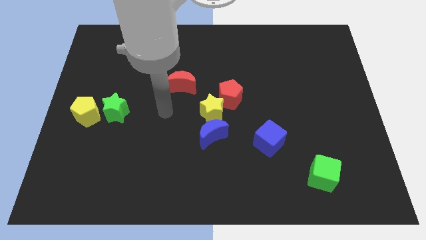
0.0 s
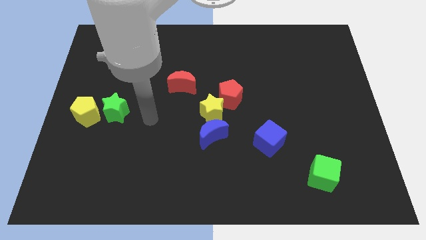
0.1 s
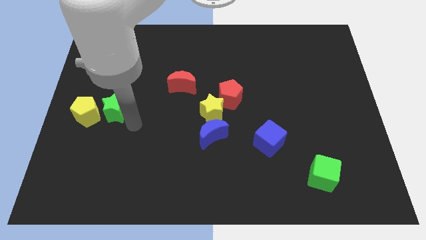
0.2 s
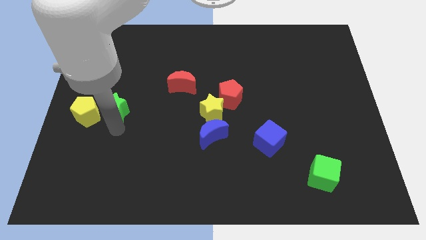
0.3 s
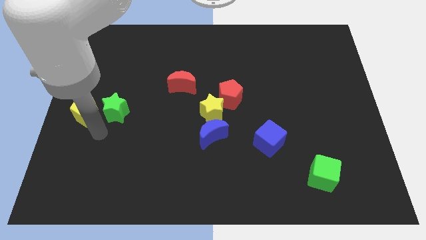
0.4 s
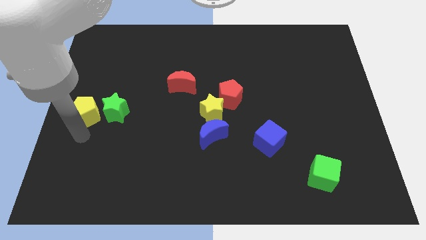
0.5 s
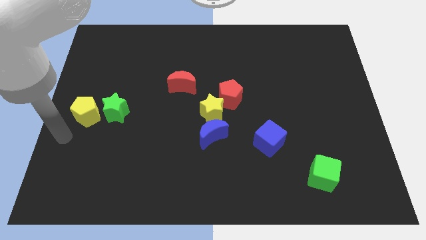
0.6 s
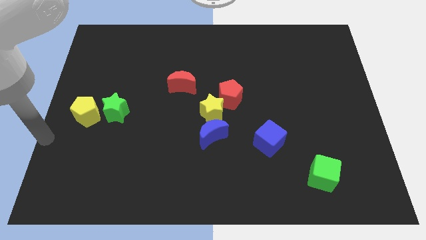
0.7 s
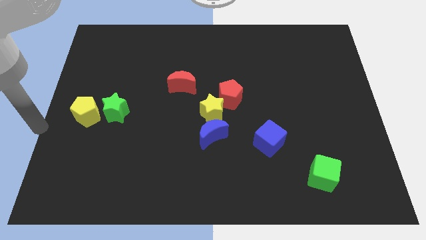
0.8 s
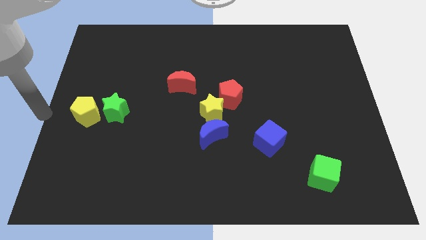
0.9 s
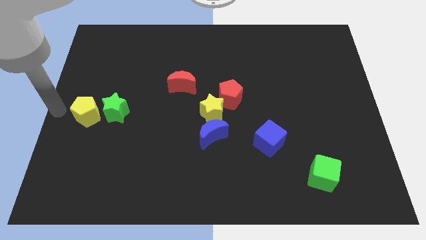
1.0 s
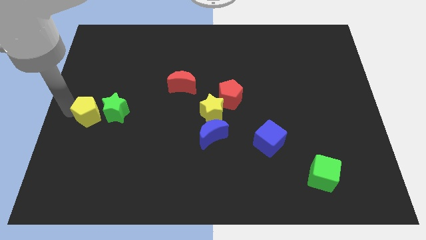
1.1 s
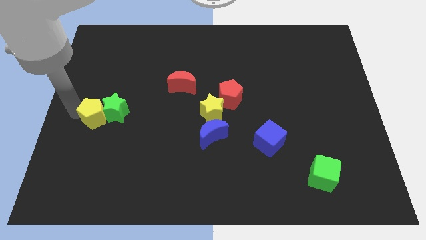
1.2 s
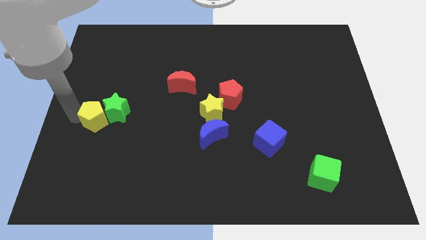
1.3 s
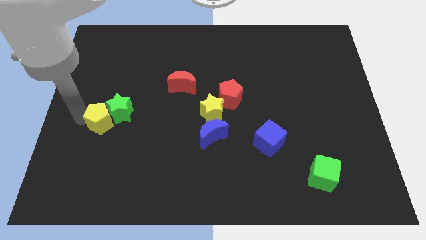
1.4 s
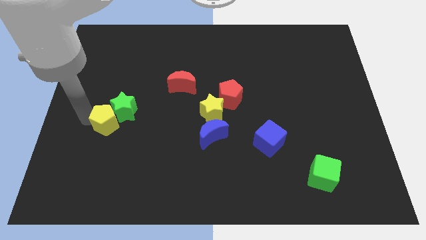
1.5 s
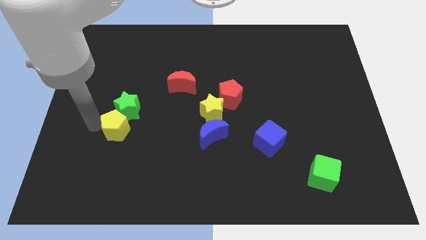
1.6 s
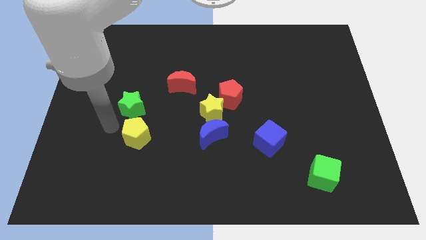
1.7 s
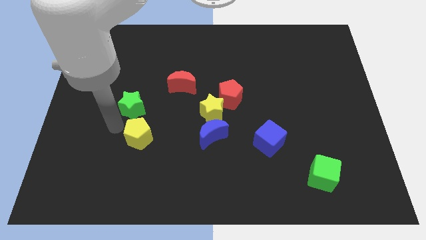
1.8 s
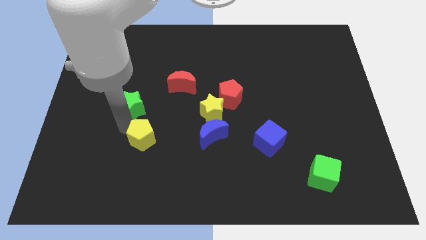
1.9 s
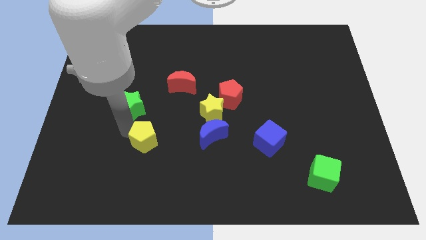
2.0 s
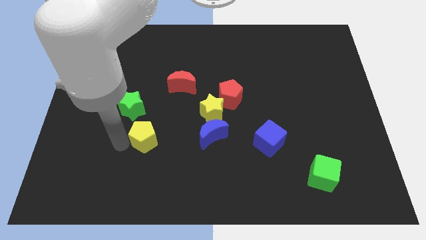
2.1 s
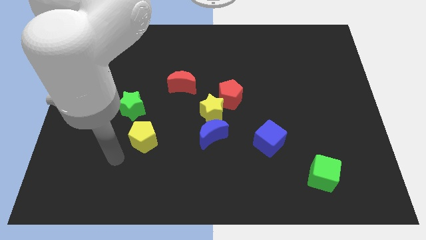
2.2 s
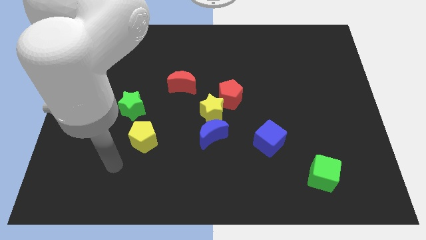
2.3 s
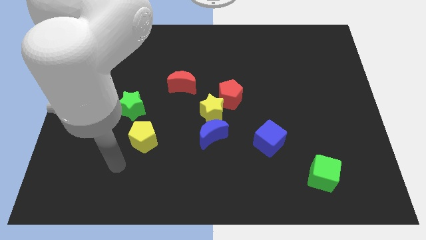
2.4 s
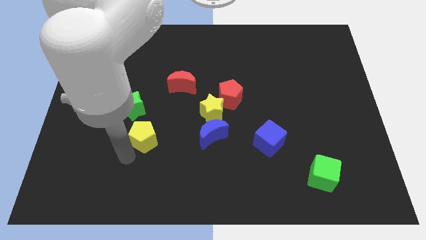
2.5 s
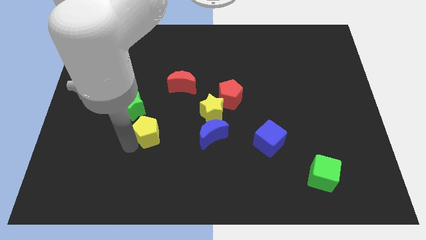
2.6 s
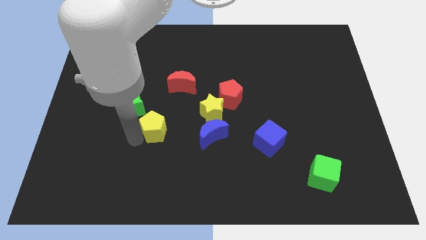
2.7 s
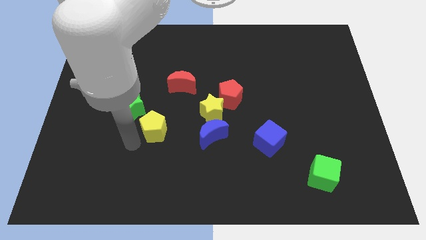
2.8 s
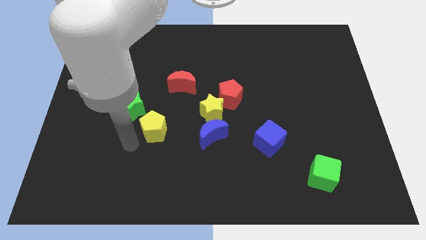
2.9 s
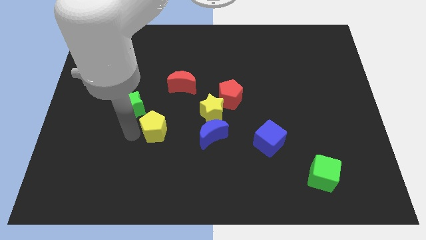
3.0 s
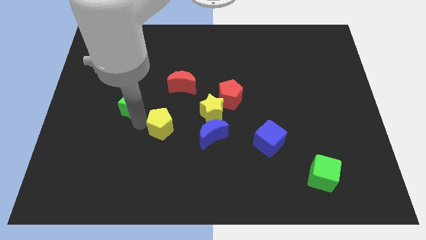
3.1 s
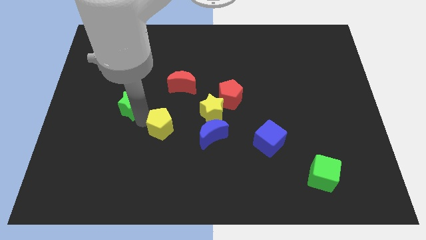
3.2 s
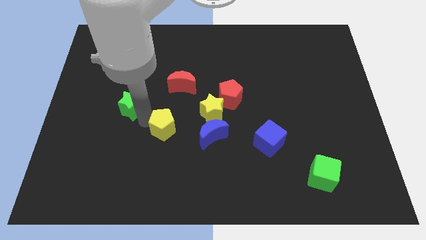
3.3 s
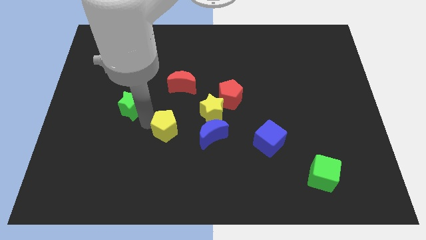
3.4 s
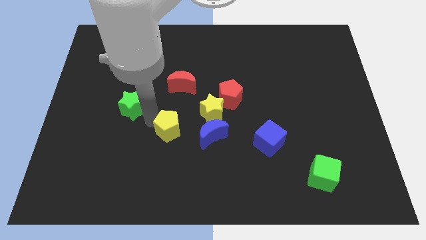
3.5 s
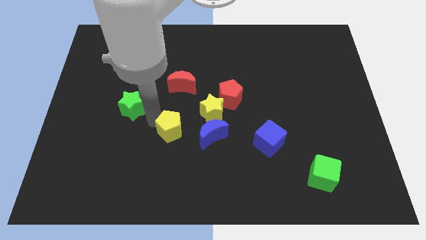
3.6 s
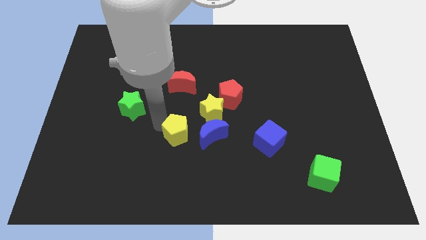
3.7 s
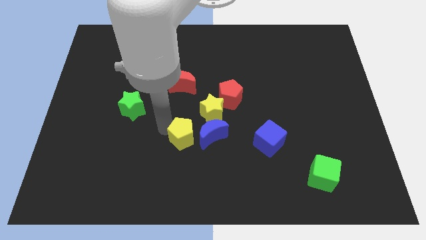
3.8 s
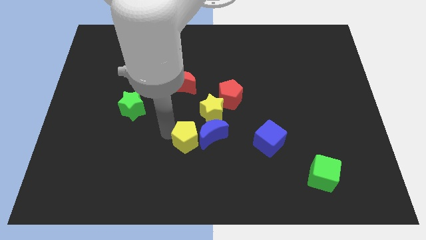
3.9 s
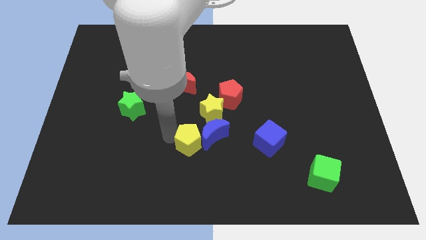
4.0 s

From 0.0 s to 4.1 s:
separate yellow pentagon from green star

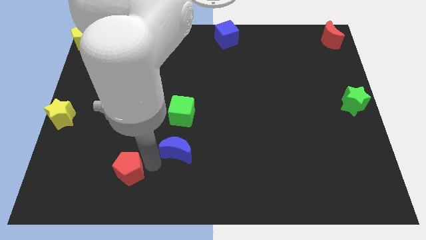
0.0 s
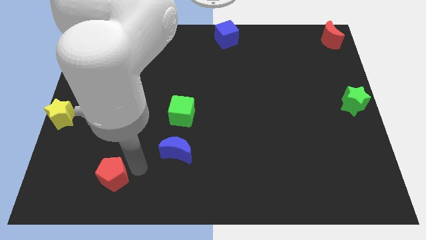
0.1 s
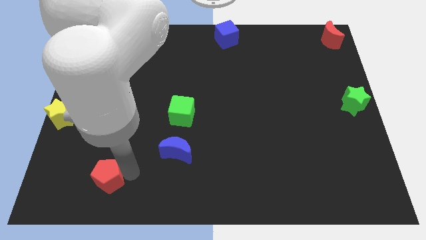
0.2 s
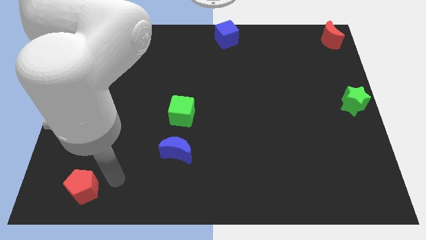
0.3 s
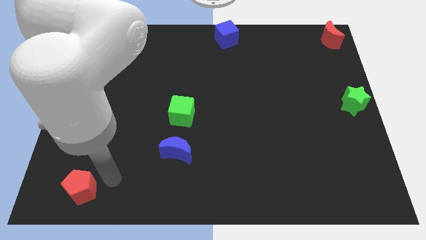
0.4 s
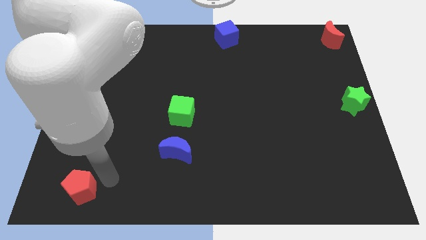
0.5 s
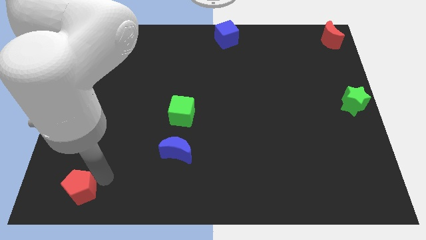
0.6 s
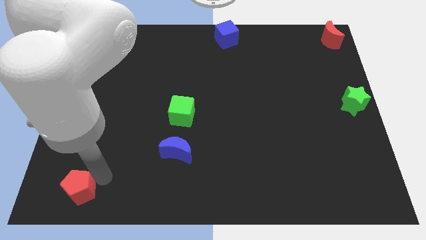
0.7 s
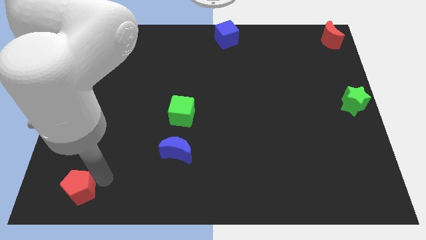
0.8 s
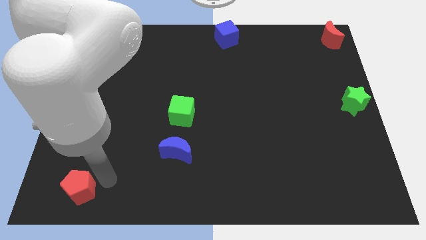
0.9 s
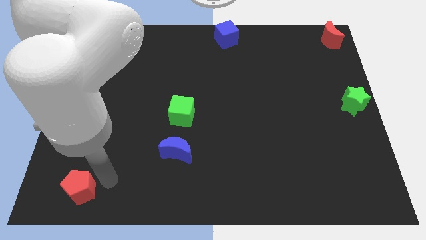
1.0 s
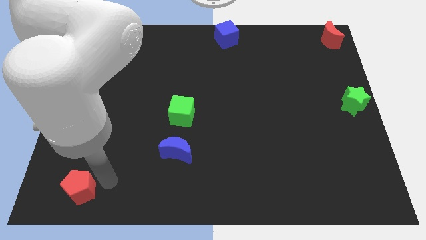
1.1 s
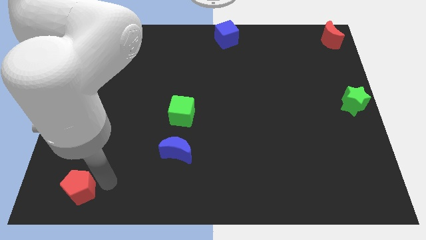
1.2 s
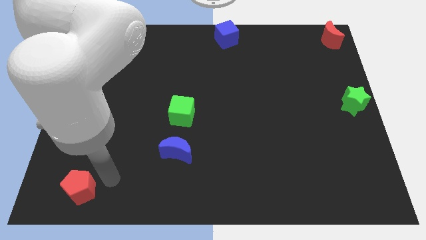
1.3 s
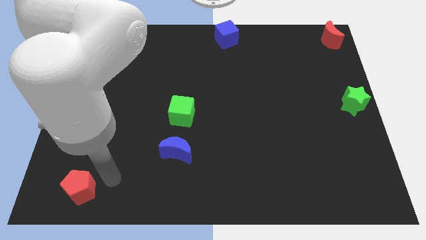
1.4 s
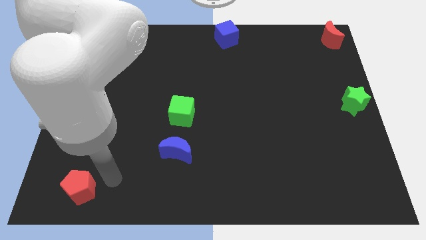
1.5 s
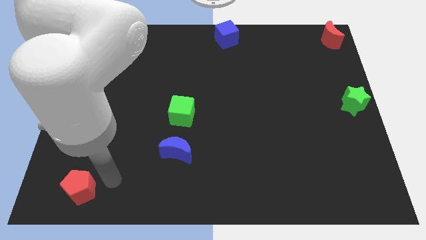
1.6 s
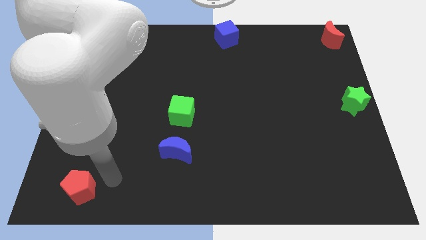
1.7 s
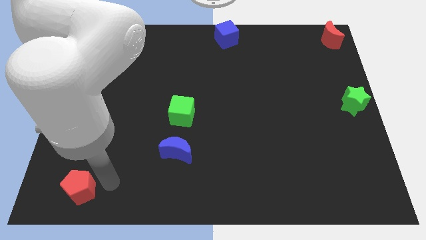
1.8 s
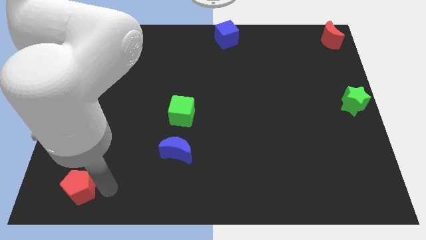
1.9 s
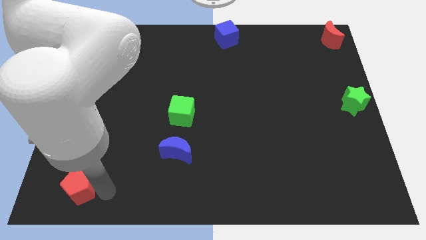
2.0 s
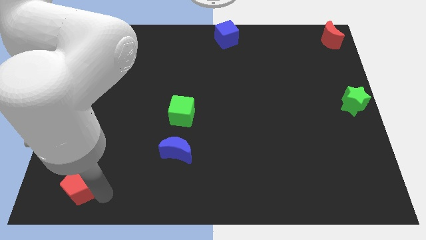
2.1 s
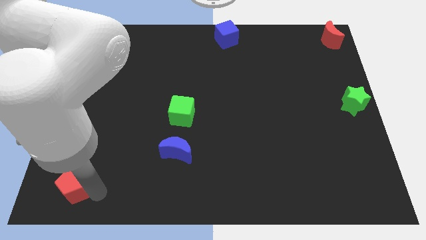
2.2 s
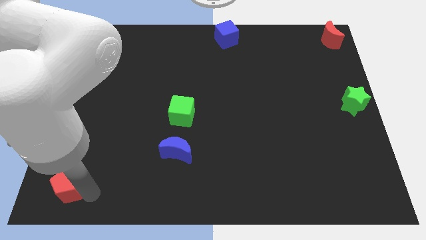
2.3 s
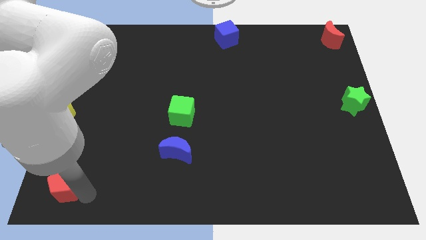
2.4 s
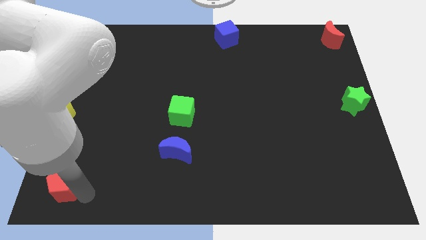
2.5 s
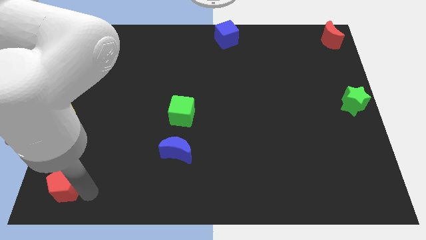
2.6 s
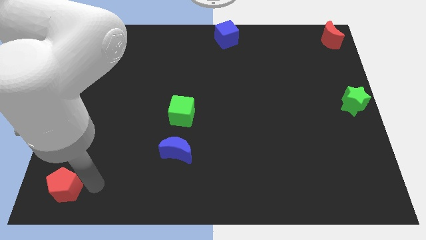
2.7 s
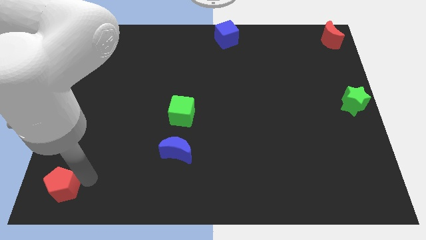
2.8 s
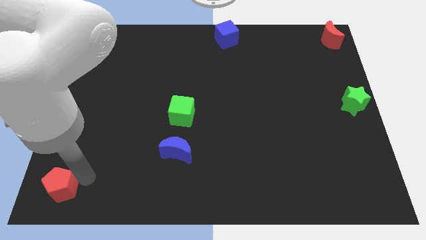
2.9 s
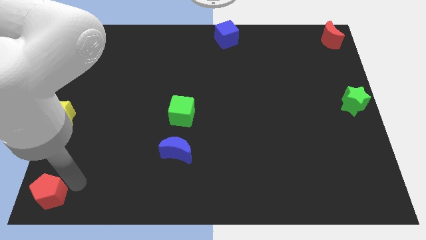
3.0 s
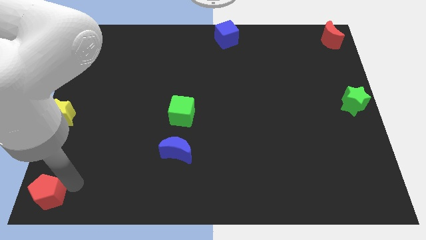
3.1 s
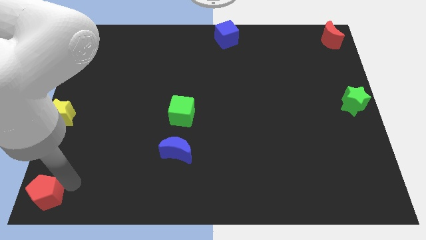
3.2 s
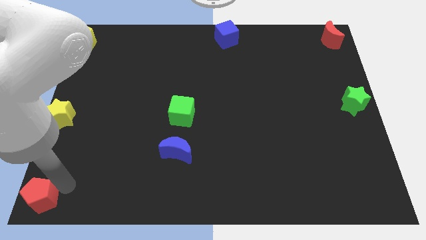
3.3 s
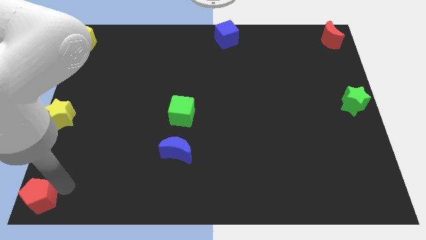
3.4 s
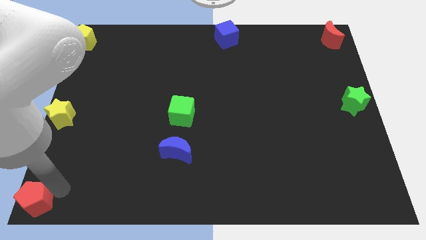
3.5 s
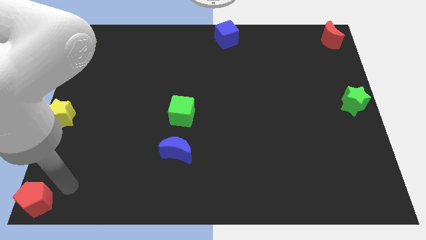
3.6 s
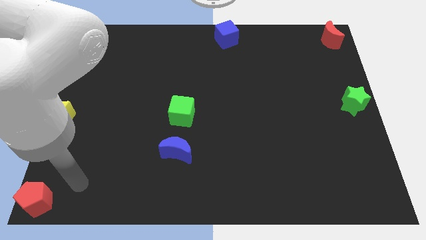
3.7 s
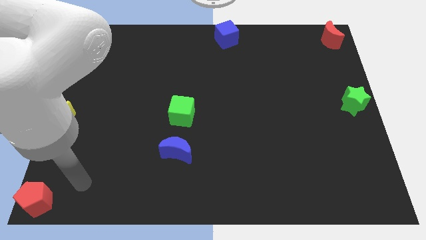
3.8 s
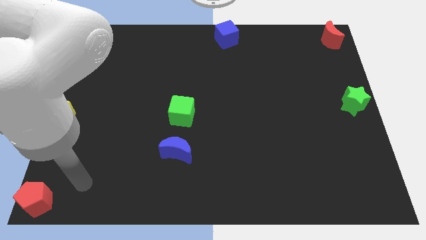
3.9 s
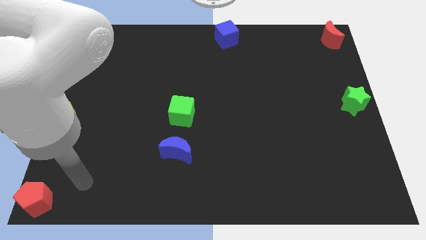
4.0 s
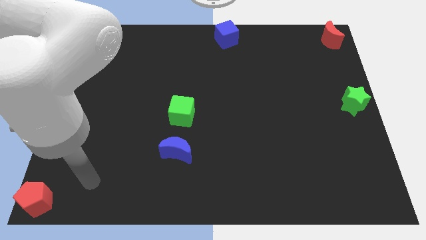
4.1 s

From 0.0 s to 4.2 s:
put the red pentagon at the bottom left corner

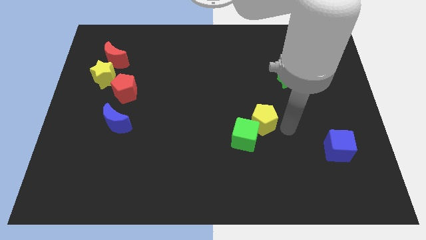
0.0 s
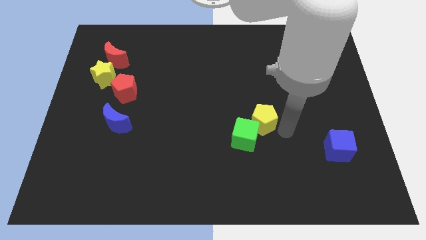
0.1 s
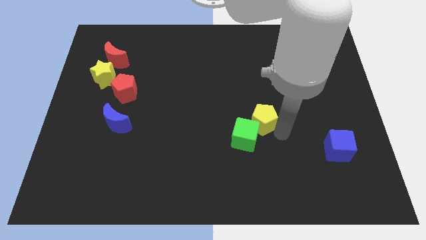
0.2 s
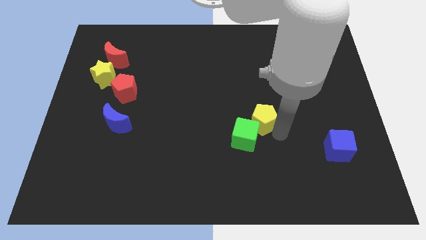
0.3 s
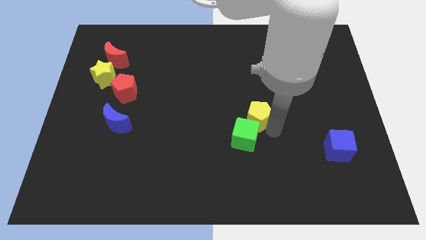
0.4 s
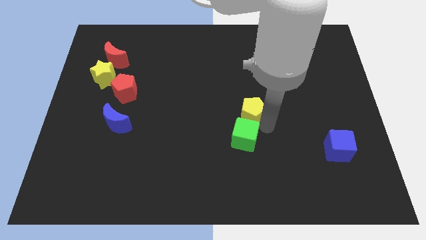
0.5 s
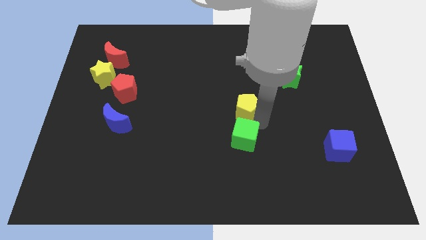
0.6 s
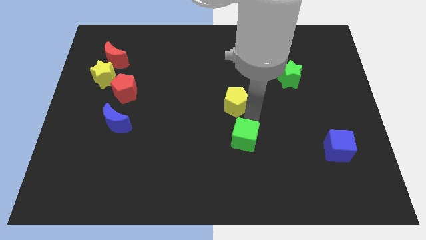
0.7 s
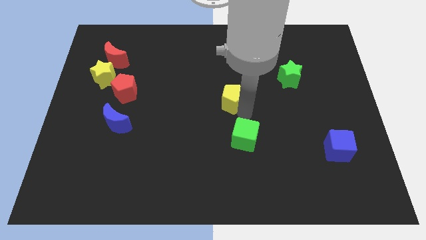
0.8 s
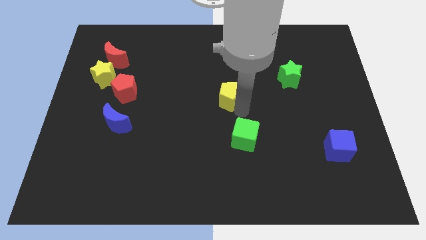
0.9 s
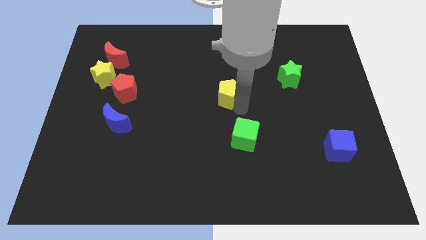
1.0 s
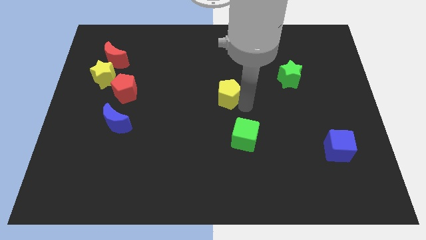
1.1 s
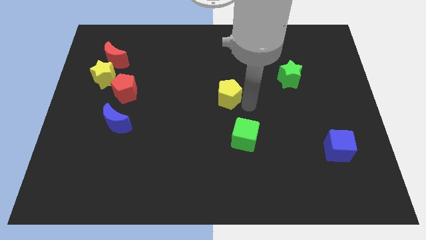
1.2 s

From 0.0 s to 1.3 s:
place the yellow pentagon above the green cube
